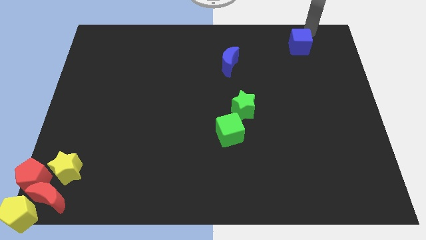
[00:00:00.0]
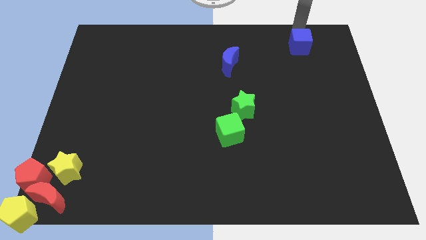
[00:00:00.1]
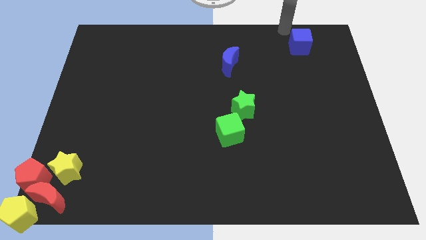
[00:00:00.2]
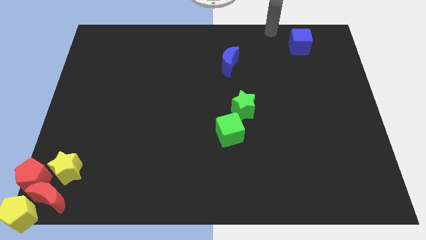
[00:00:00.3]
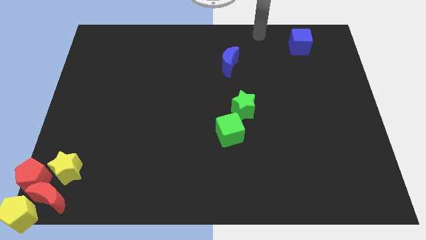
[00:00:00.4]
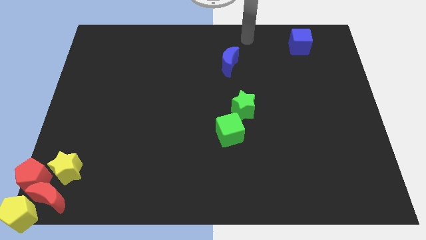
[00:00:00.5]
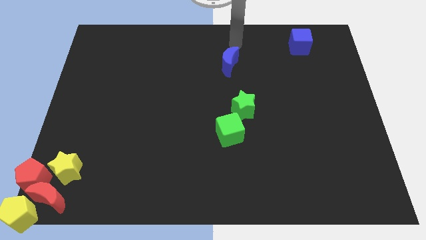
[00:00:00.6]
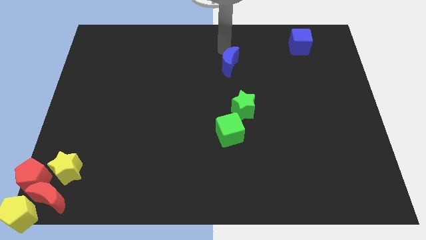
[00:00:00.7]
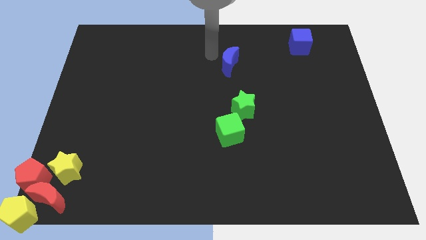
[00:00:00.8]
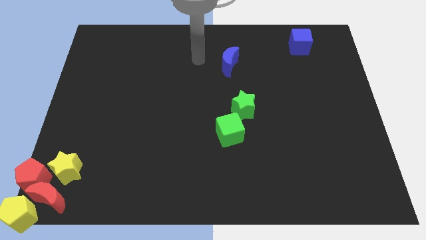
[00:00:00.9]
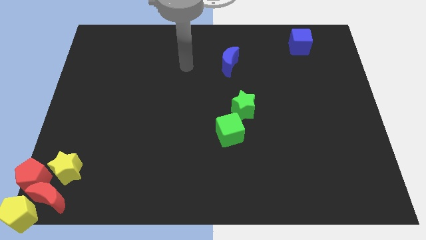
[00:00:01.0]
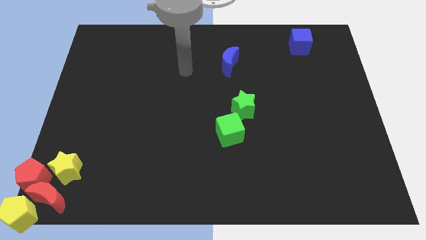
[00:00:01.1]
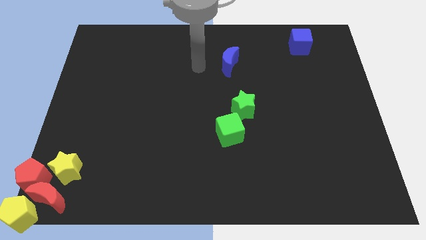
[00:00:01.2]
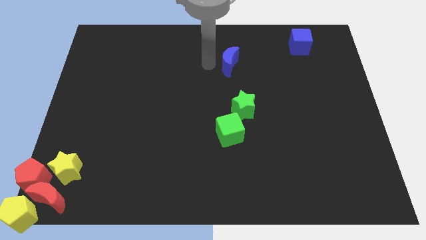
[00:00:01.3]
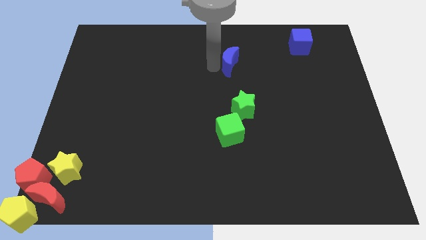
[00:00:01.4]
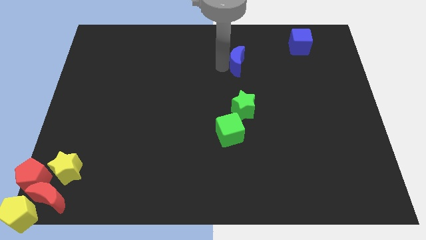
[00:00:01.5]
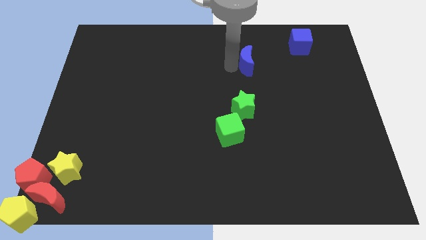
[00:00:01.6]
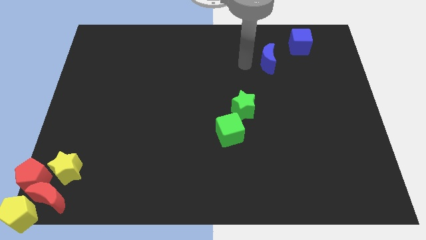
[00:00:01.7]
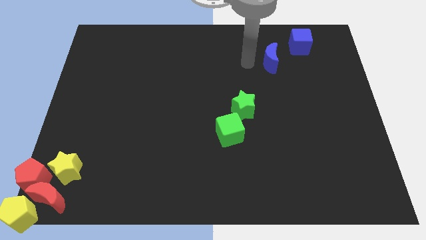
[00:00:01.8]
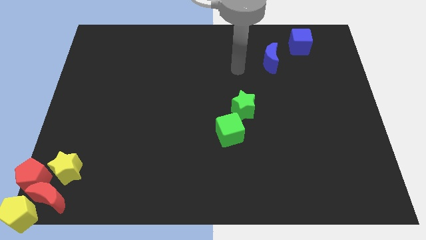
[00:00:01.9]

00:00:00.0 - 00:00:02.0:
place the blue moon diagonal to the green star

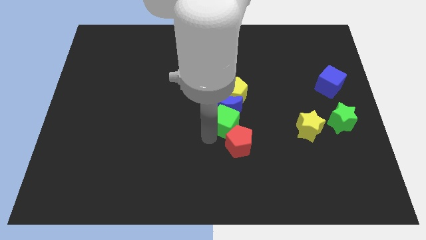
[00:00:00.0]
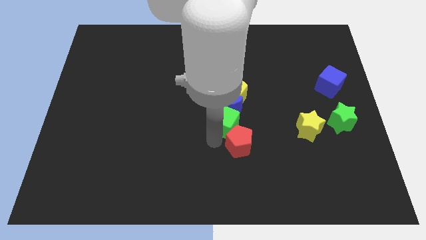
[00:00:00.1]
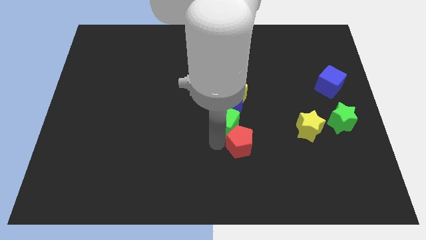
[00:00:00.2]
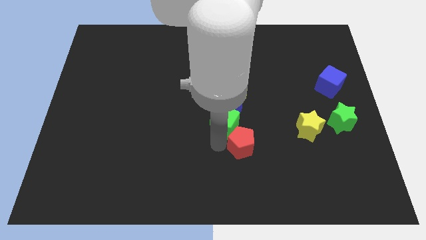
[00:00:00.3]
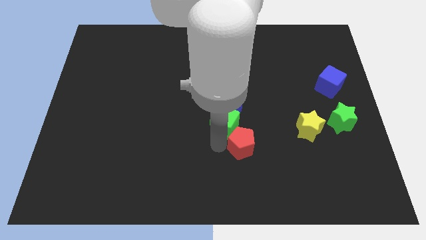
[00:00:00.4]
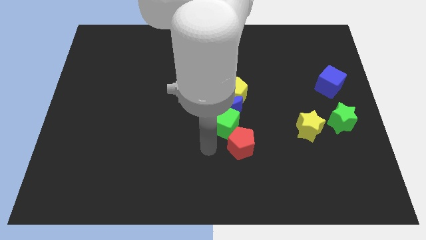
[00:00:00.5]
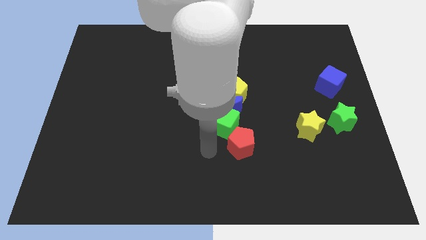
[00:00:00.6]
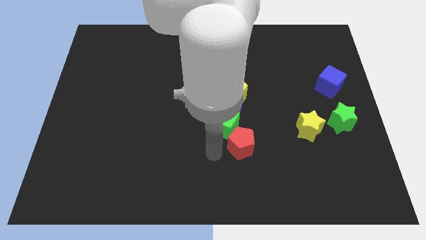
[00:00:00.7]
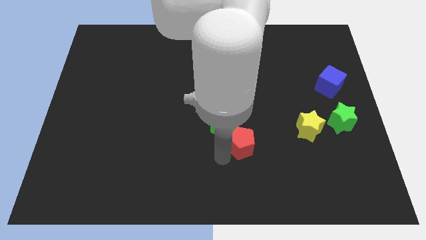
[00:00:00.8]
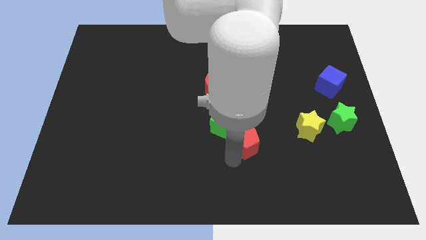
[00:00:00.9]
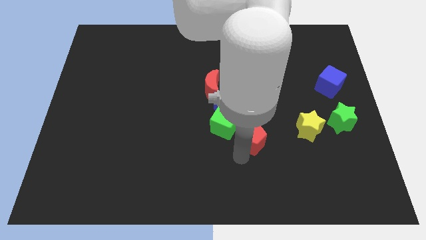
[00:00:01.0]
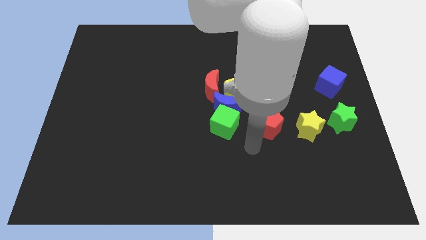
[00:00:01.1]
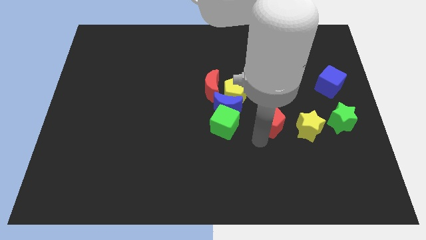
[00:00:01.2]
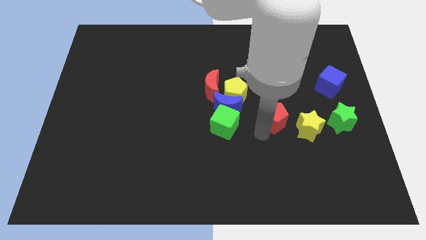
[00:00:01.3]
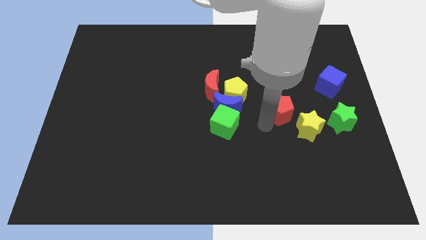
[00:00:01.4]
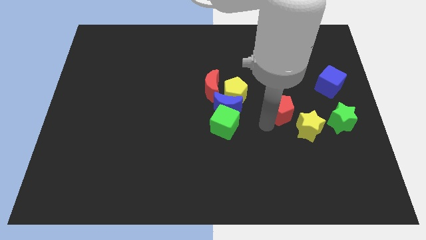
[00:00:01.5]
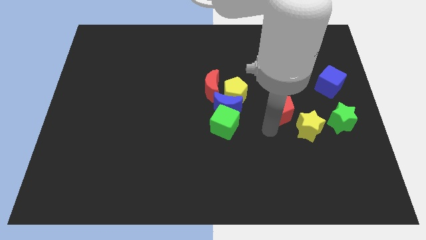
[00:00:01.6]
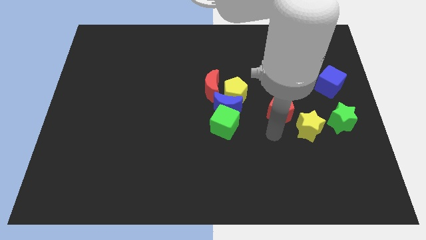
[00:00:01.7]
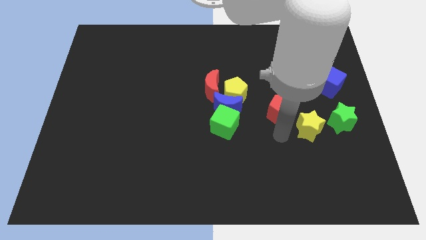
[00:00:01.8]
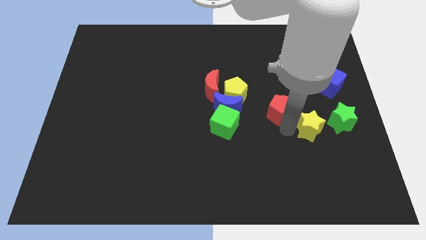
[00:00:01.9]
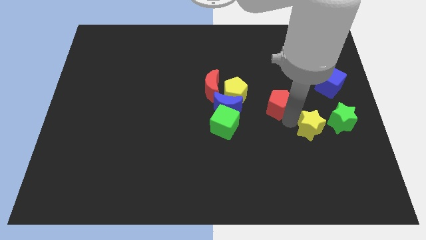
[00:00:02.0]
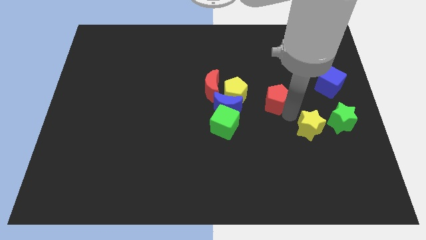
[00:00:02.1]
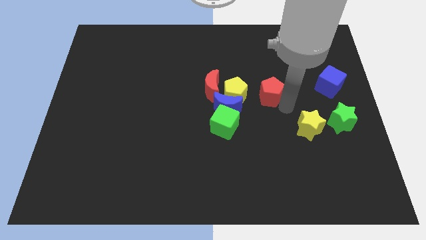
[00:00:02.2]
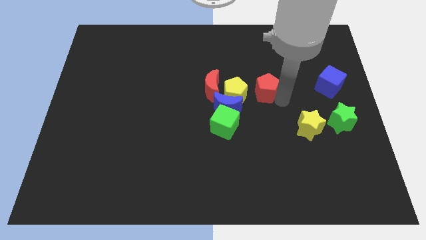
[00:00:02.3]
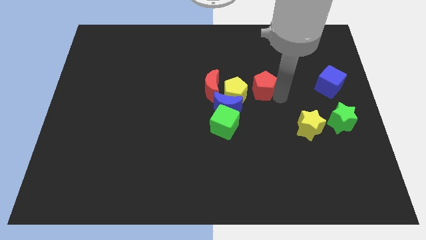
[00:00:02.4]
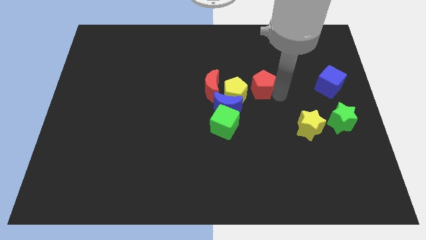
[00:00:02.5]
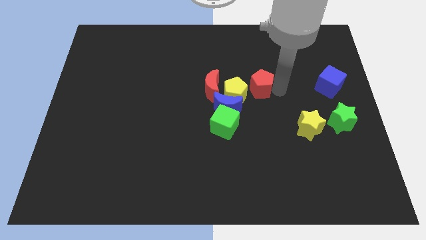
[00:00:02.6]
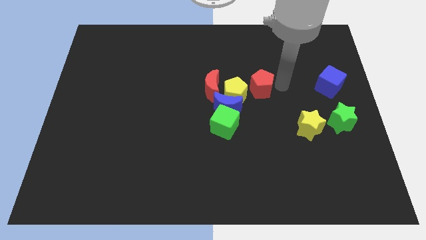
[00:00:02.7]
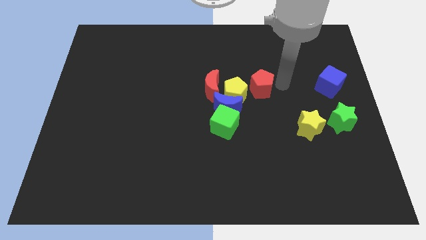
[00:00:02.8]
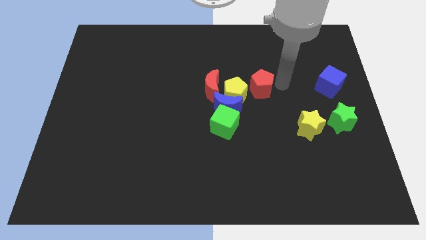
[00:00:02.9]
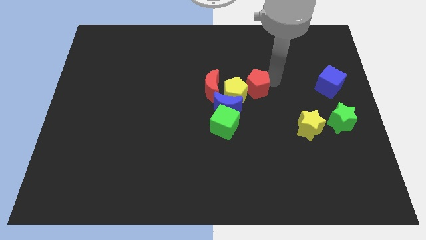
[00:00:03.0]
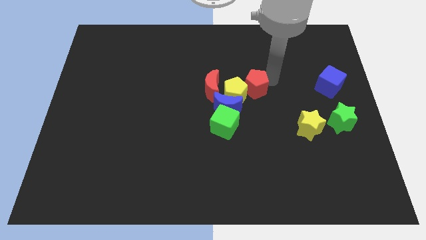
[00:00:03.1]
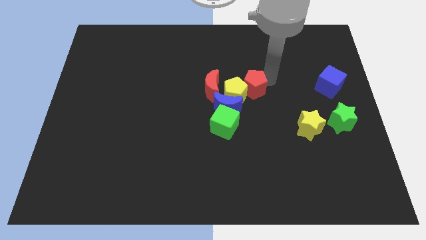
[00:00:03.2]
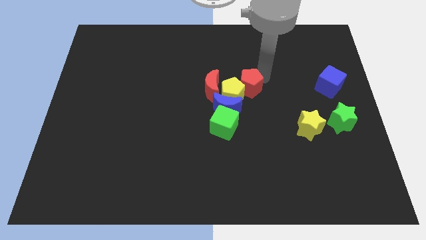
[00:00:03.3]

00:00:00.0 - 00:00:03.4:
separate the red pentagon from the green cube

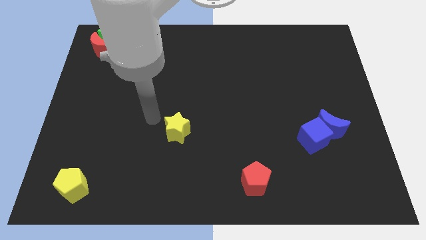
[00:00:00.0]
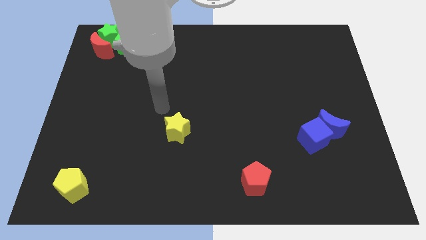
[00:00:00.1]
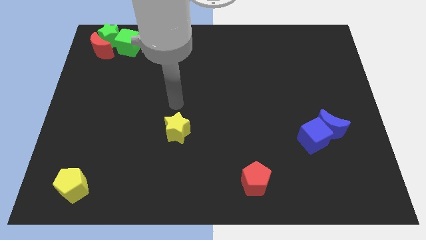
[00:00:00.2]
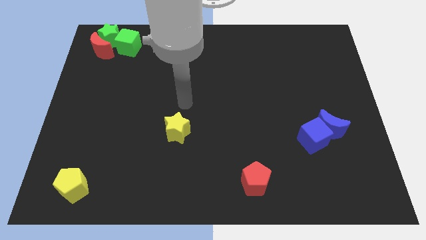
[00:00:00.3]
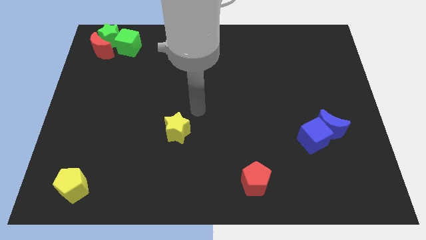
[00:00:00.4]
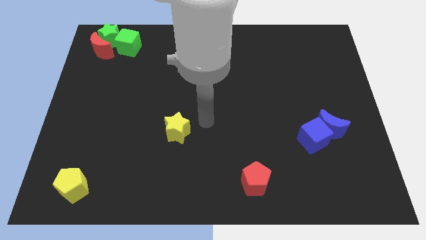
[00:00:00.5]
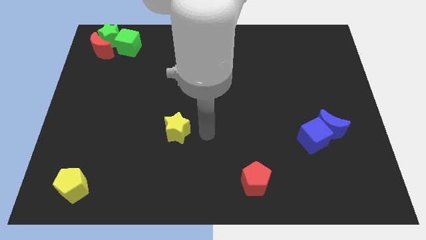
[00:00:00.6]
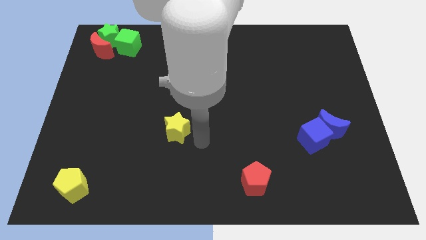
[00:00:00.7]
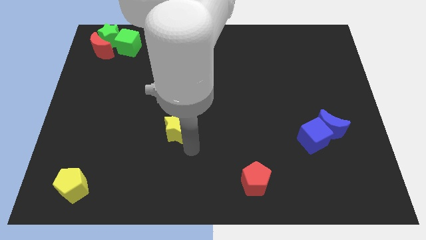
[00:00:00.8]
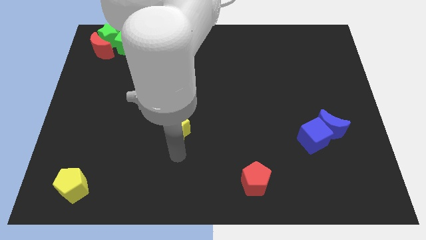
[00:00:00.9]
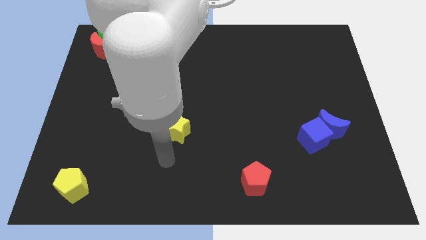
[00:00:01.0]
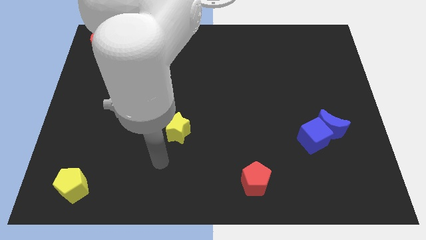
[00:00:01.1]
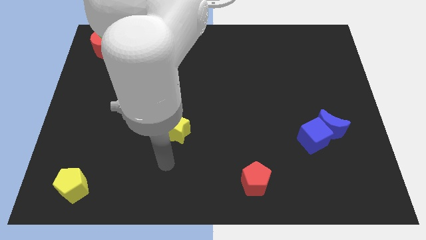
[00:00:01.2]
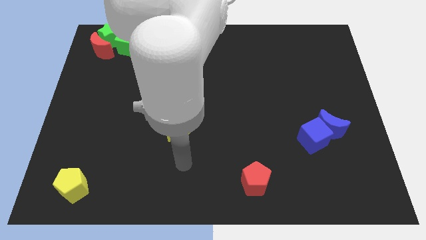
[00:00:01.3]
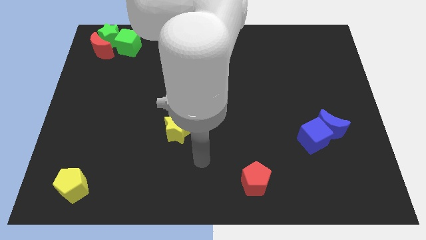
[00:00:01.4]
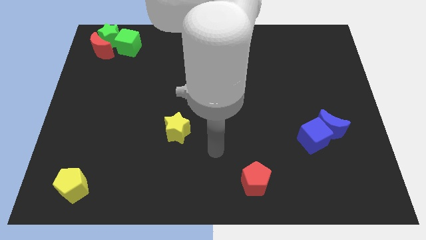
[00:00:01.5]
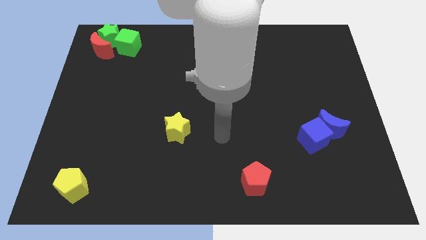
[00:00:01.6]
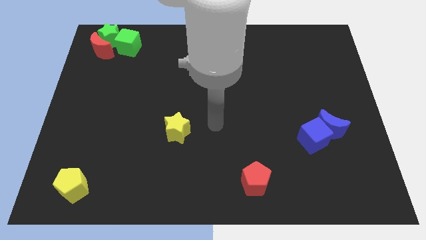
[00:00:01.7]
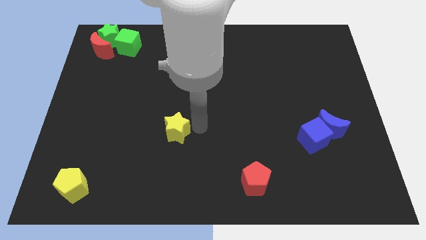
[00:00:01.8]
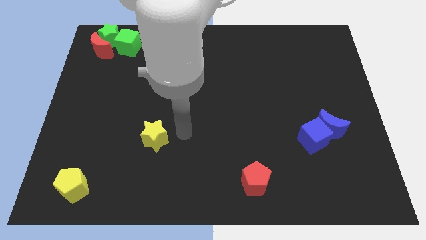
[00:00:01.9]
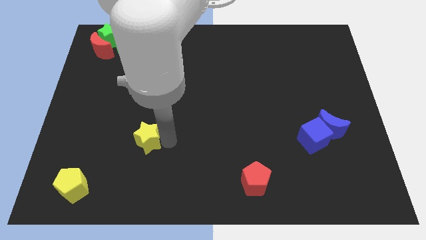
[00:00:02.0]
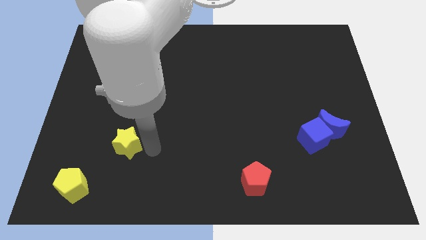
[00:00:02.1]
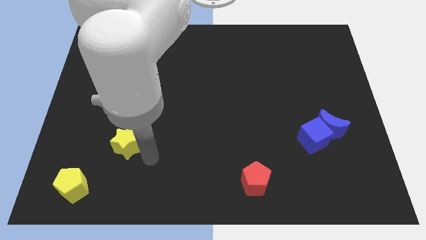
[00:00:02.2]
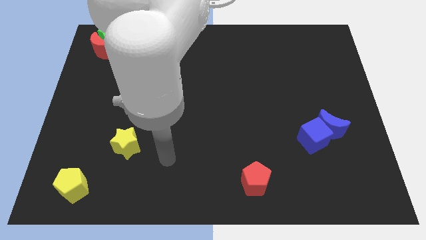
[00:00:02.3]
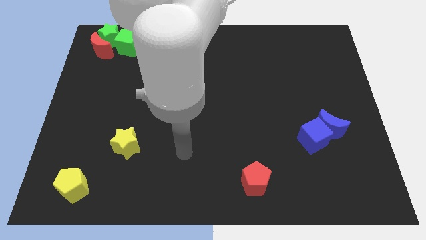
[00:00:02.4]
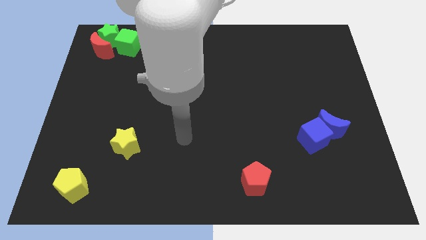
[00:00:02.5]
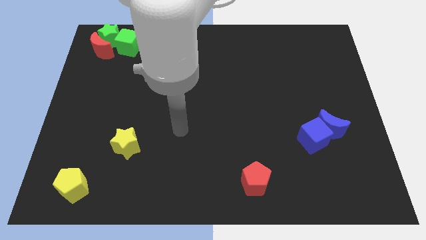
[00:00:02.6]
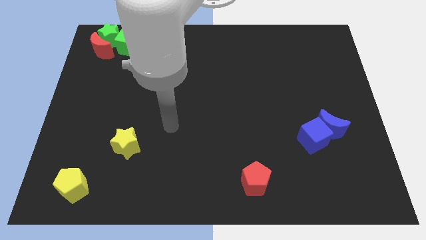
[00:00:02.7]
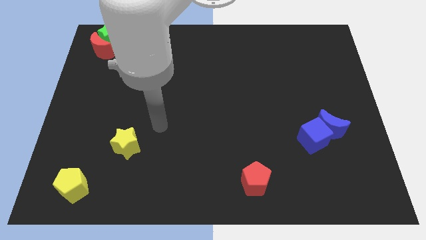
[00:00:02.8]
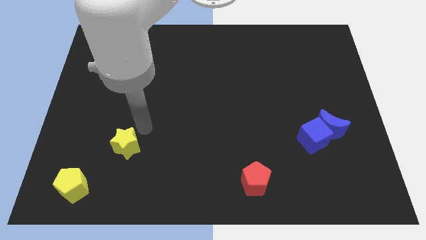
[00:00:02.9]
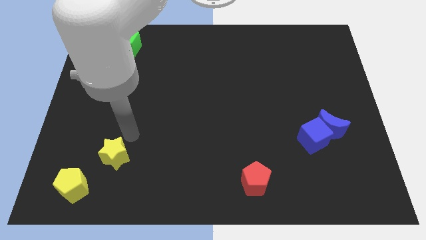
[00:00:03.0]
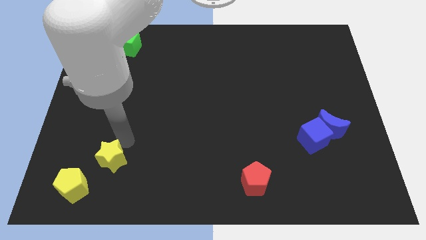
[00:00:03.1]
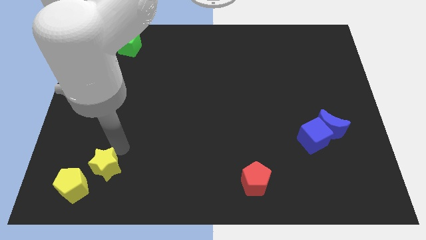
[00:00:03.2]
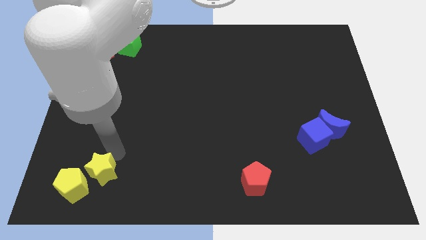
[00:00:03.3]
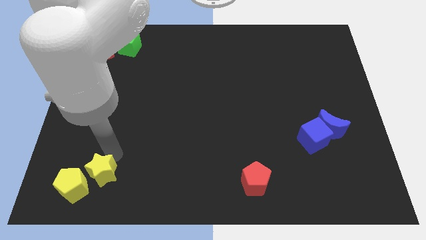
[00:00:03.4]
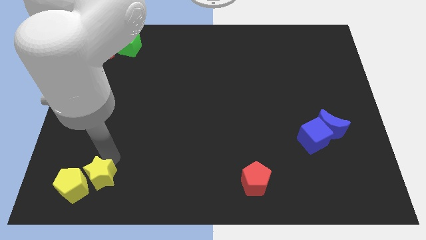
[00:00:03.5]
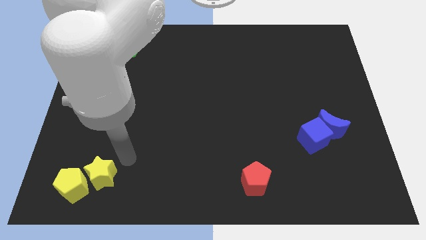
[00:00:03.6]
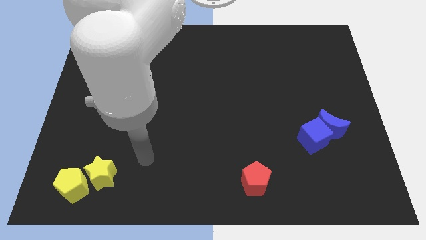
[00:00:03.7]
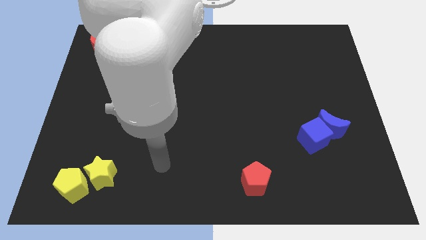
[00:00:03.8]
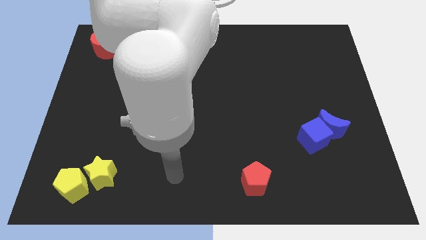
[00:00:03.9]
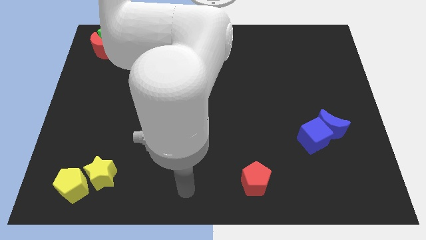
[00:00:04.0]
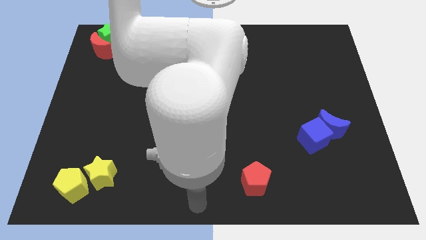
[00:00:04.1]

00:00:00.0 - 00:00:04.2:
place the yellow star to the yellow pentagon
